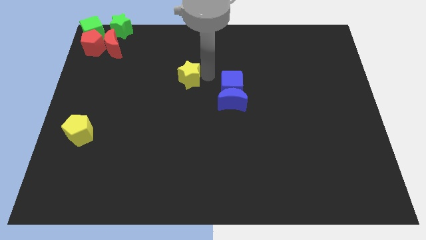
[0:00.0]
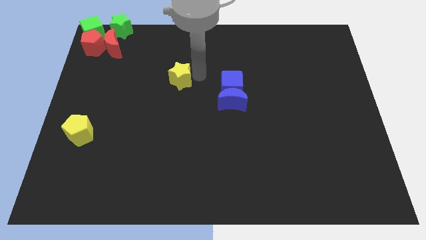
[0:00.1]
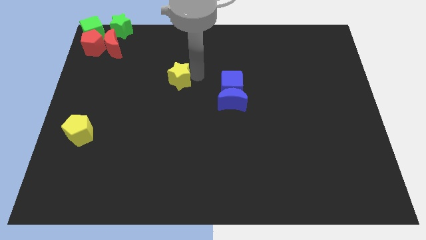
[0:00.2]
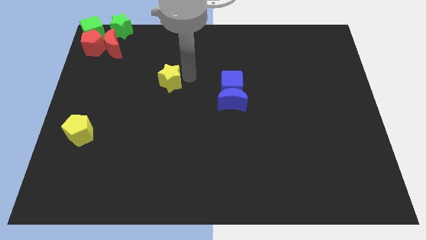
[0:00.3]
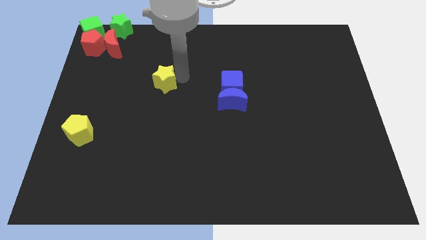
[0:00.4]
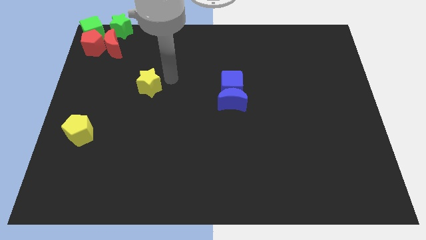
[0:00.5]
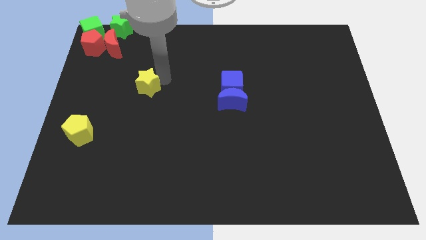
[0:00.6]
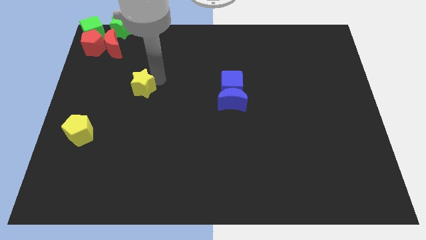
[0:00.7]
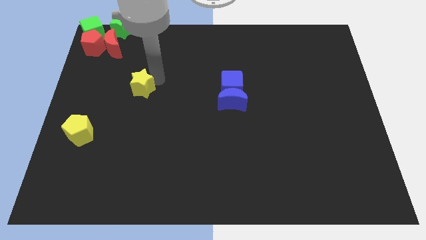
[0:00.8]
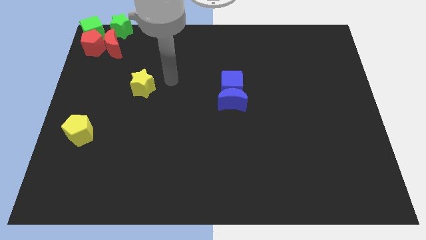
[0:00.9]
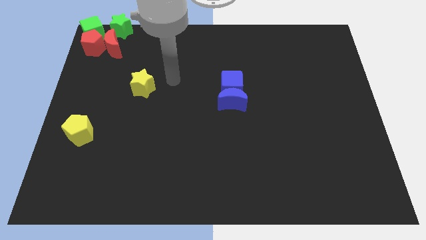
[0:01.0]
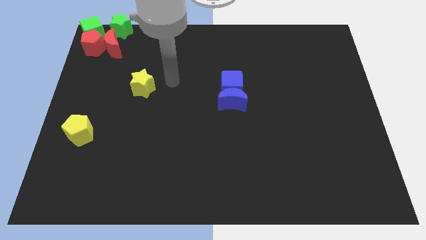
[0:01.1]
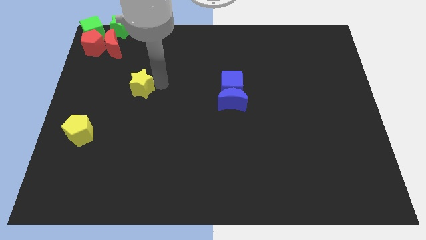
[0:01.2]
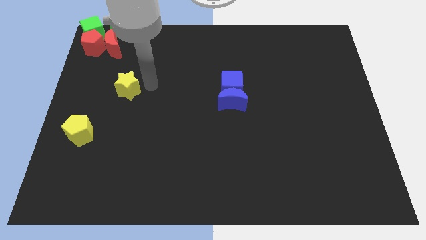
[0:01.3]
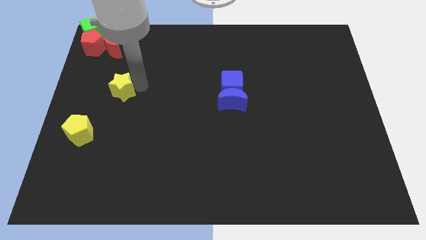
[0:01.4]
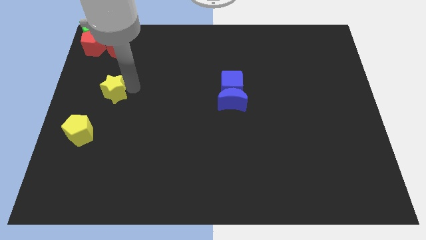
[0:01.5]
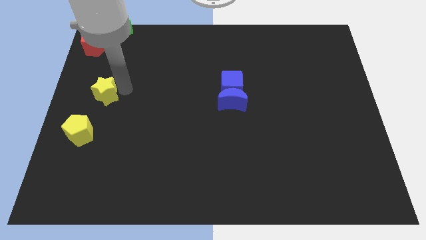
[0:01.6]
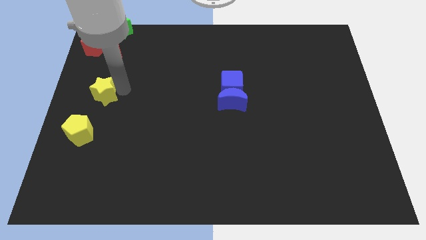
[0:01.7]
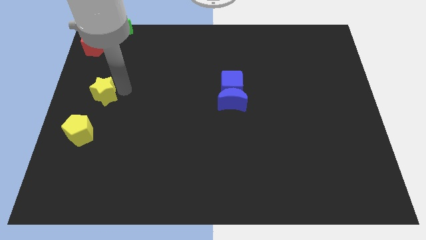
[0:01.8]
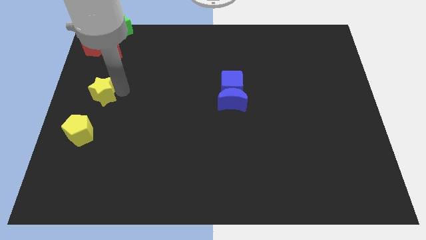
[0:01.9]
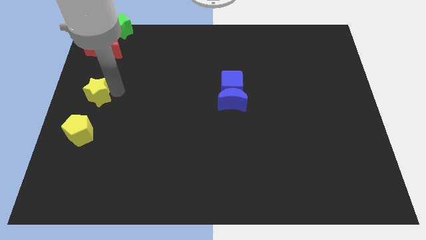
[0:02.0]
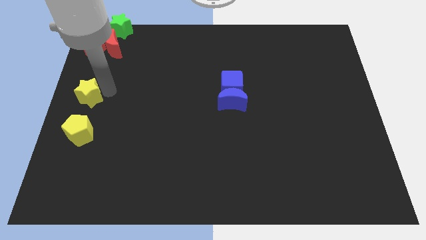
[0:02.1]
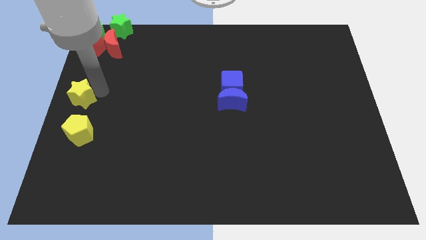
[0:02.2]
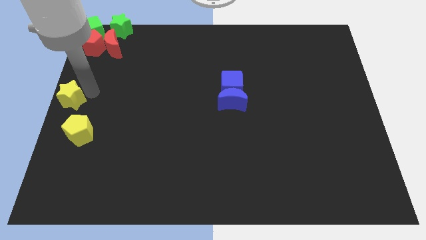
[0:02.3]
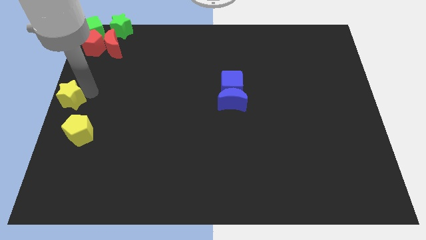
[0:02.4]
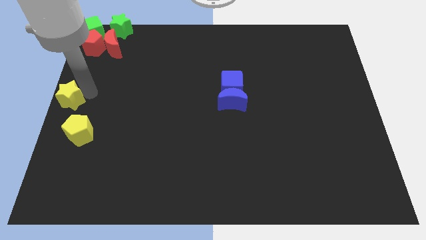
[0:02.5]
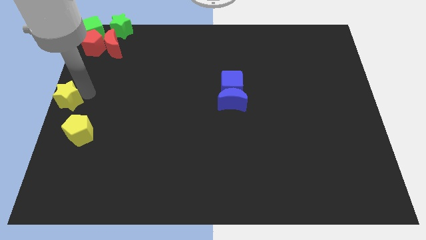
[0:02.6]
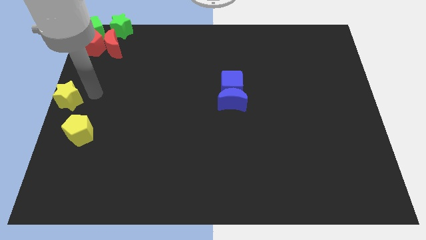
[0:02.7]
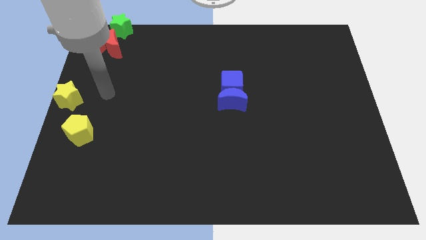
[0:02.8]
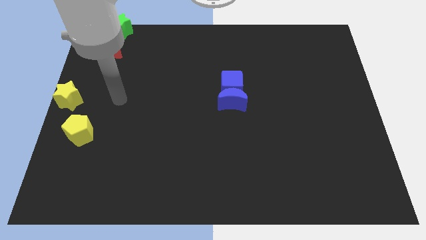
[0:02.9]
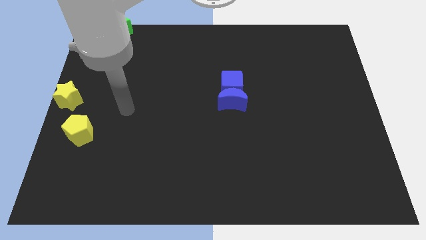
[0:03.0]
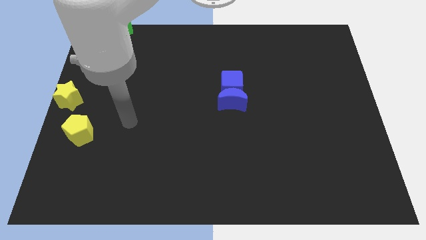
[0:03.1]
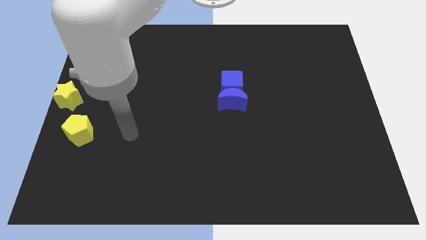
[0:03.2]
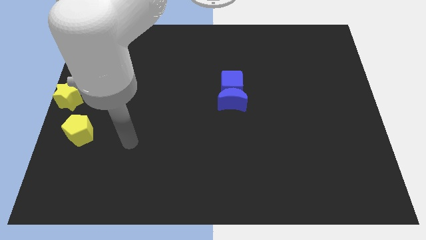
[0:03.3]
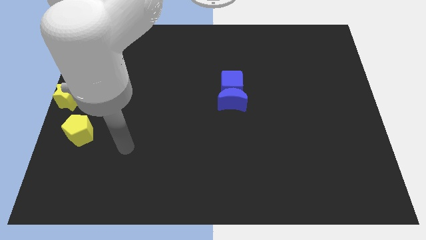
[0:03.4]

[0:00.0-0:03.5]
push the yellow star to the top left of the yellow pentagon

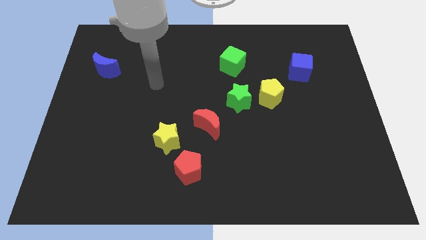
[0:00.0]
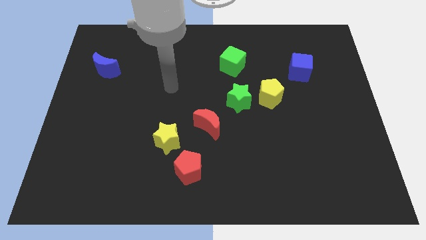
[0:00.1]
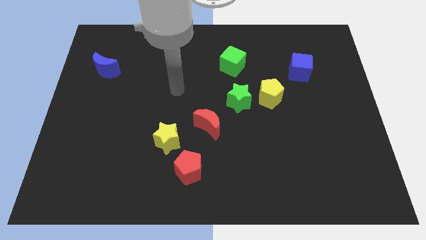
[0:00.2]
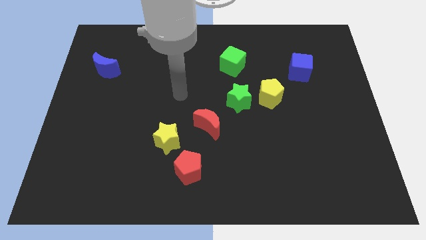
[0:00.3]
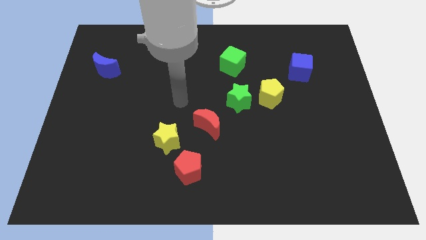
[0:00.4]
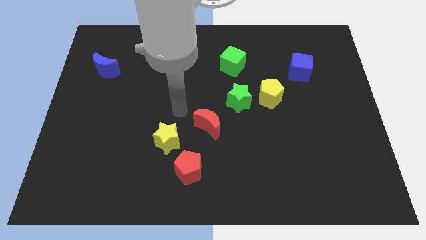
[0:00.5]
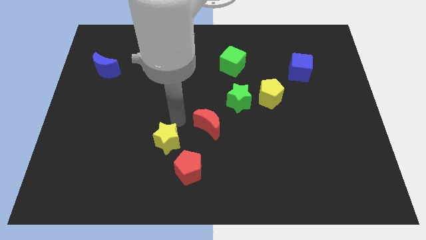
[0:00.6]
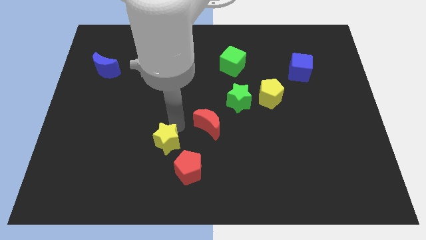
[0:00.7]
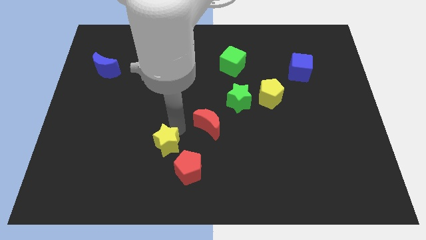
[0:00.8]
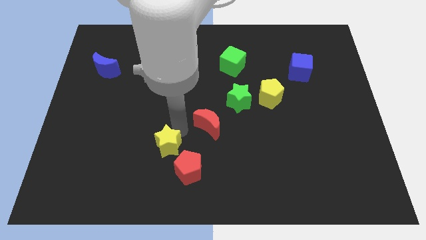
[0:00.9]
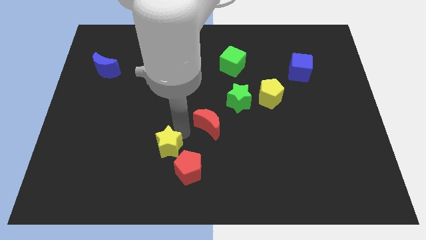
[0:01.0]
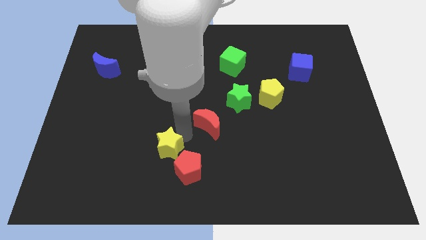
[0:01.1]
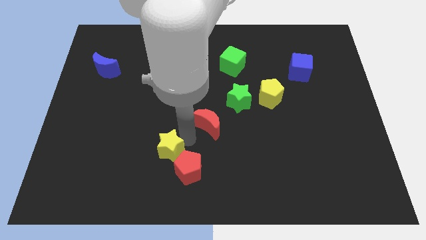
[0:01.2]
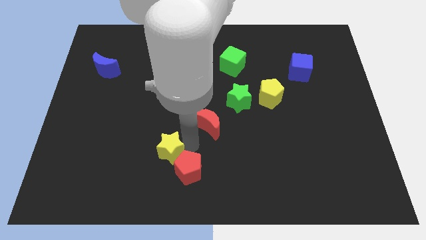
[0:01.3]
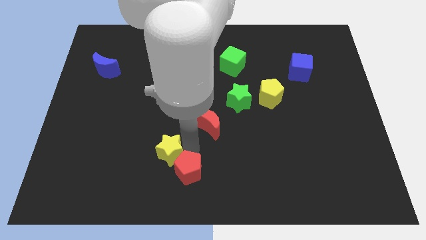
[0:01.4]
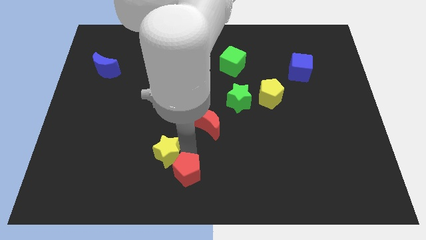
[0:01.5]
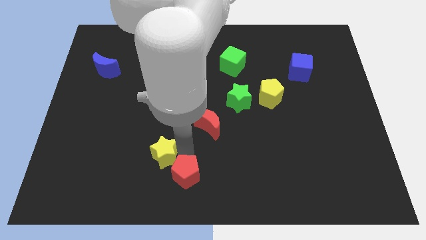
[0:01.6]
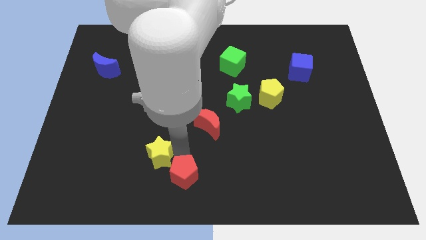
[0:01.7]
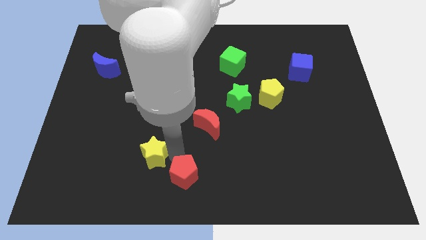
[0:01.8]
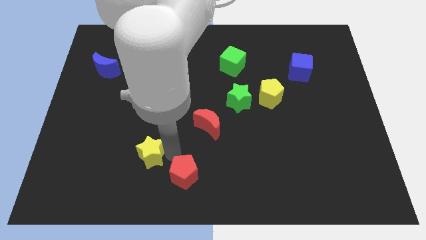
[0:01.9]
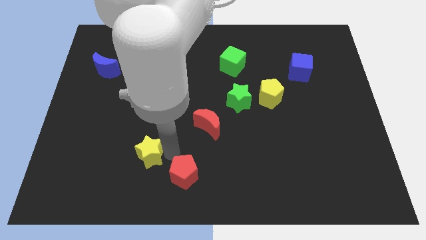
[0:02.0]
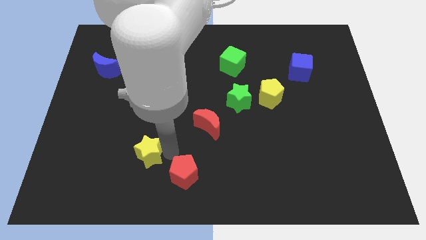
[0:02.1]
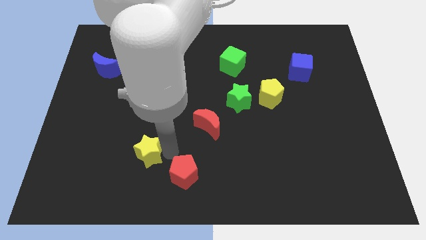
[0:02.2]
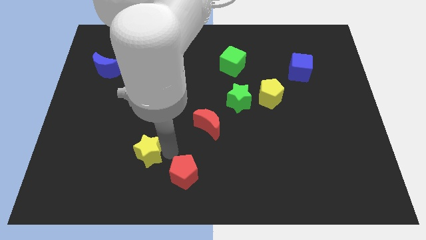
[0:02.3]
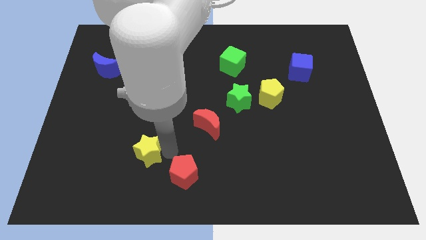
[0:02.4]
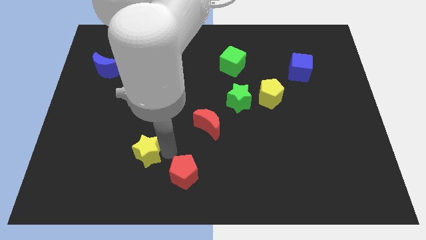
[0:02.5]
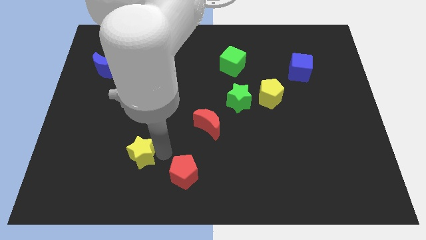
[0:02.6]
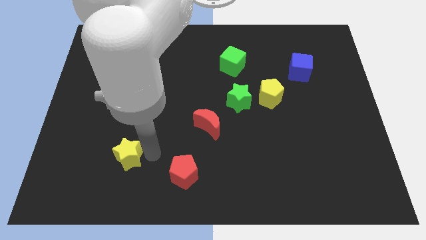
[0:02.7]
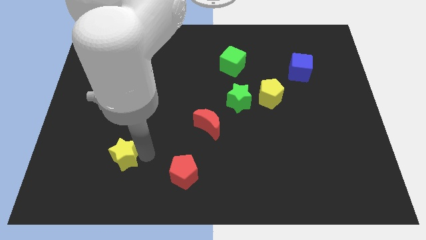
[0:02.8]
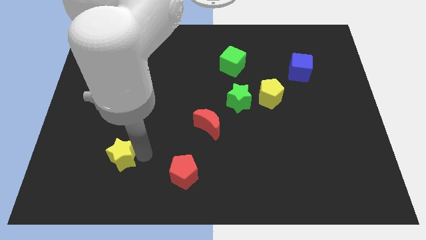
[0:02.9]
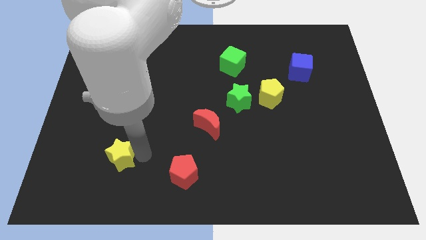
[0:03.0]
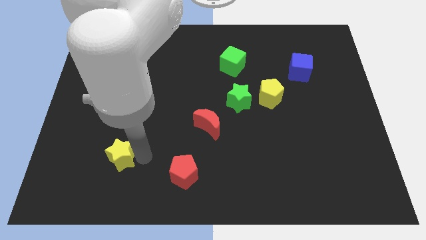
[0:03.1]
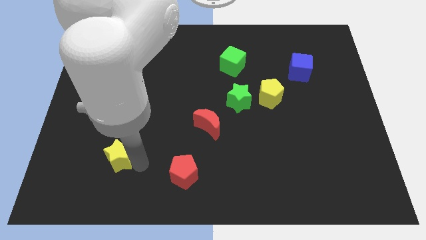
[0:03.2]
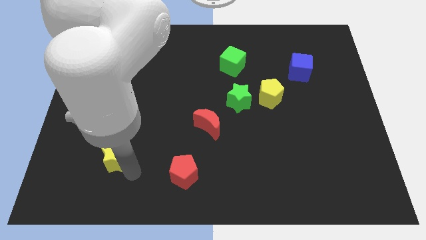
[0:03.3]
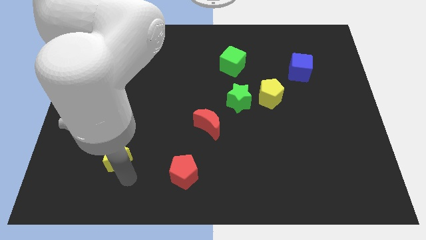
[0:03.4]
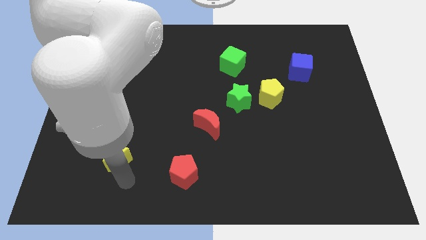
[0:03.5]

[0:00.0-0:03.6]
move yellow star towards its left

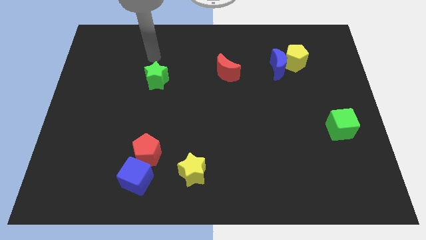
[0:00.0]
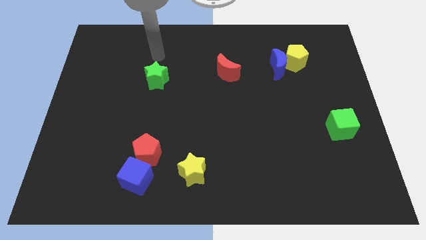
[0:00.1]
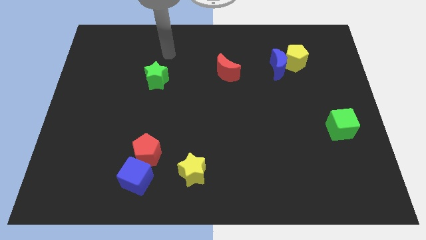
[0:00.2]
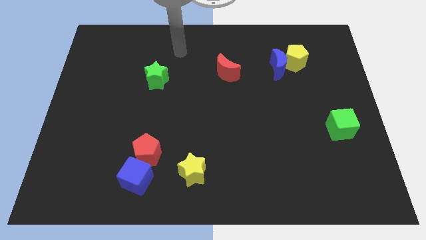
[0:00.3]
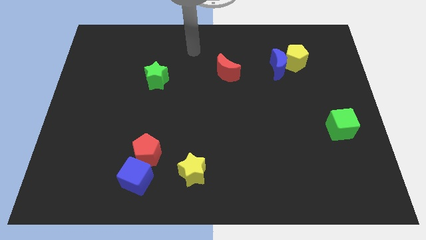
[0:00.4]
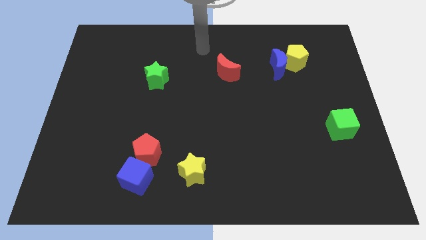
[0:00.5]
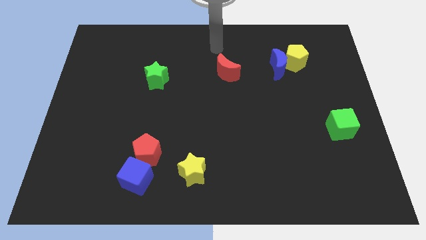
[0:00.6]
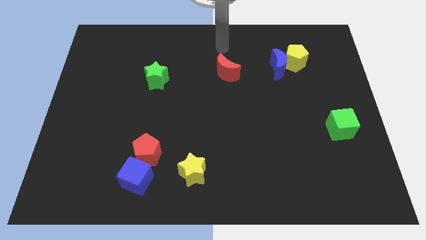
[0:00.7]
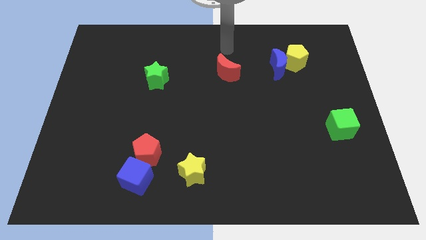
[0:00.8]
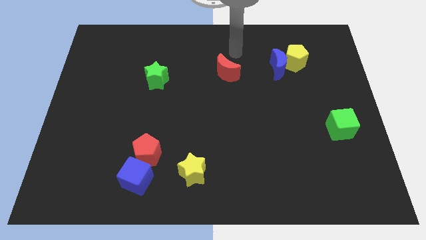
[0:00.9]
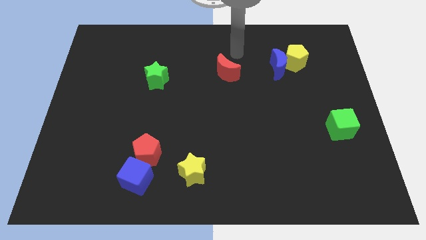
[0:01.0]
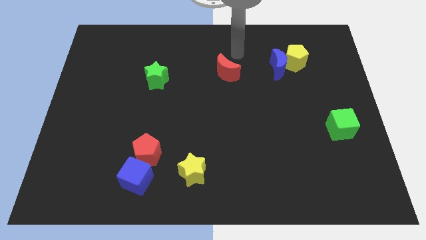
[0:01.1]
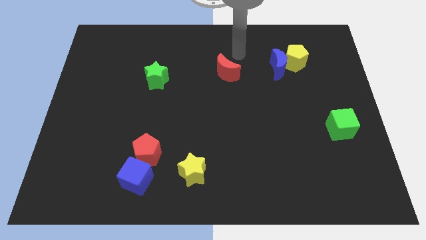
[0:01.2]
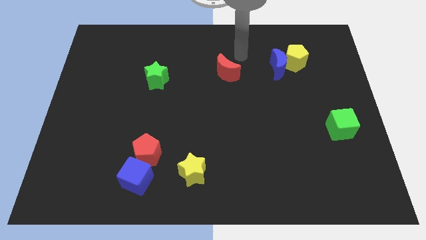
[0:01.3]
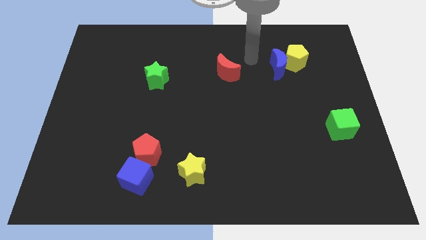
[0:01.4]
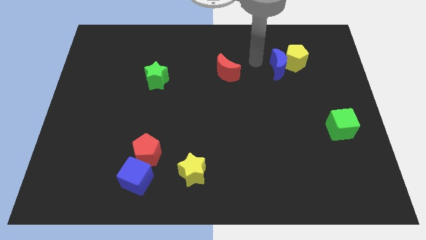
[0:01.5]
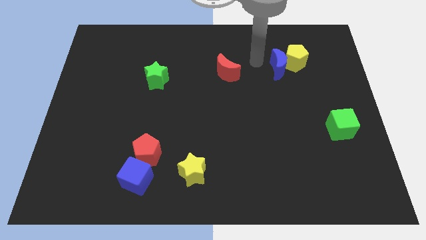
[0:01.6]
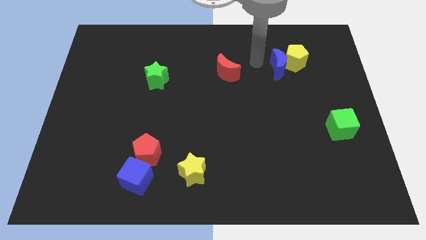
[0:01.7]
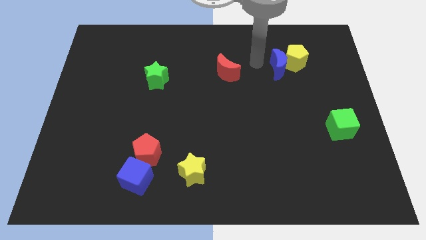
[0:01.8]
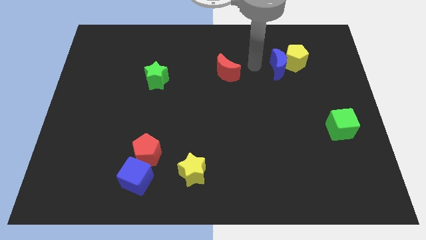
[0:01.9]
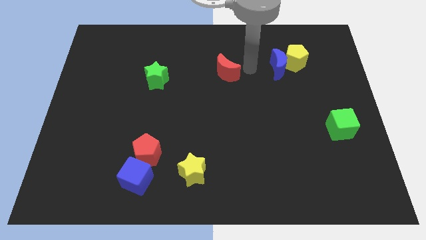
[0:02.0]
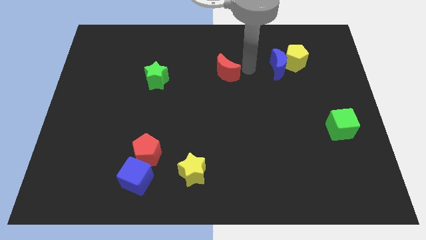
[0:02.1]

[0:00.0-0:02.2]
place your arm in between the crescents
